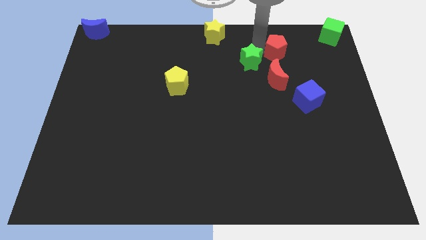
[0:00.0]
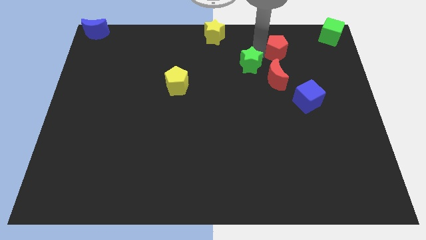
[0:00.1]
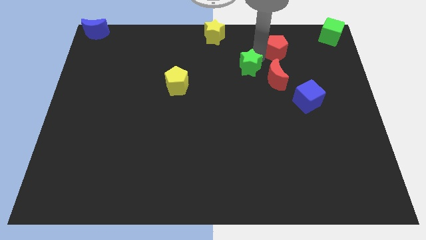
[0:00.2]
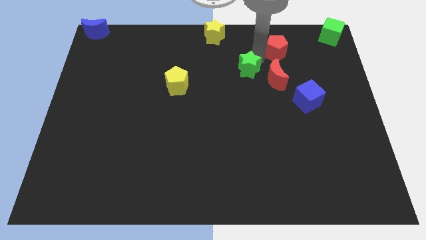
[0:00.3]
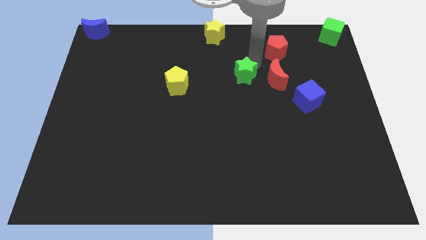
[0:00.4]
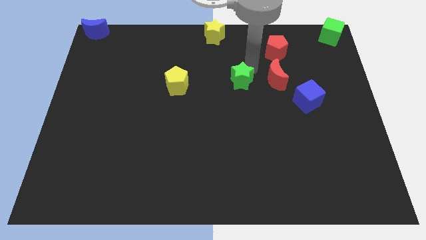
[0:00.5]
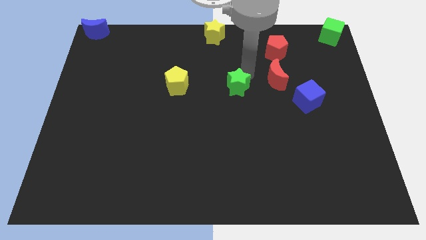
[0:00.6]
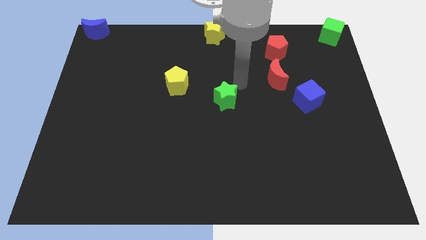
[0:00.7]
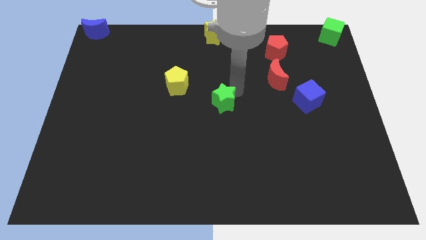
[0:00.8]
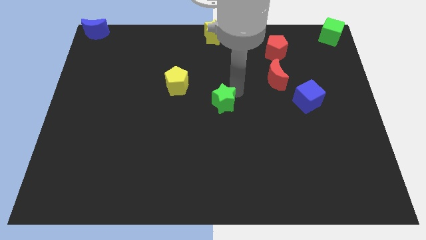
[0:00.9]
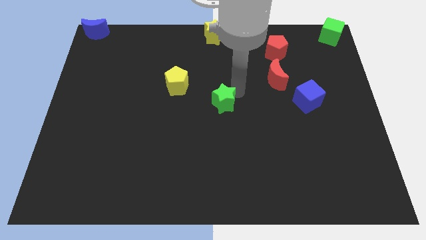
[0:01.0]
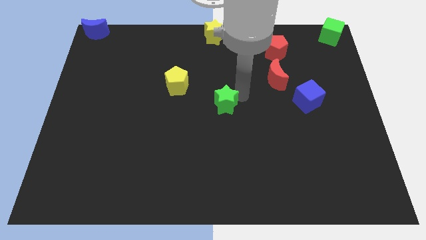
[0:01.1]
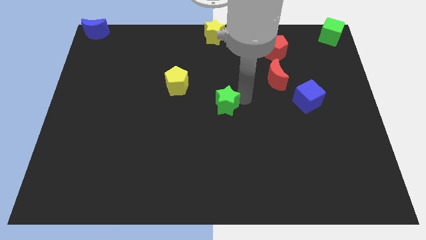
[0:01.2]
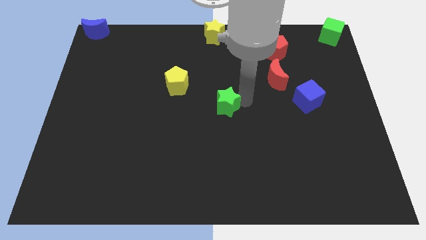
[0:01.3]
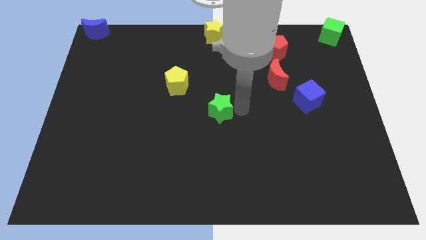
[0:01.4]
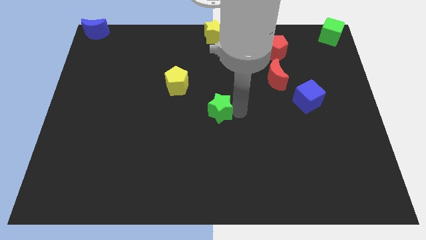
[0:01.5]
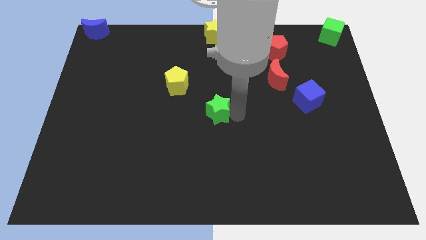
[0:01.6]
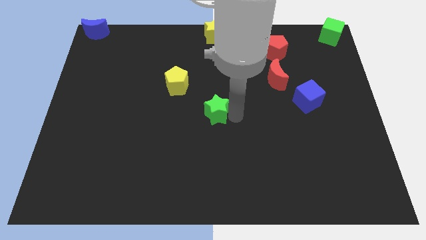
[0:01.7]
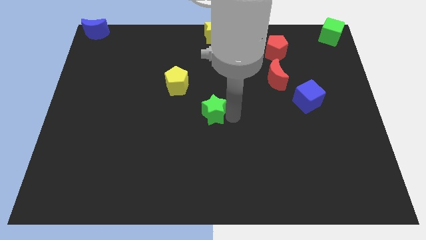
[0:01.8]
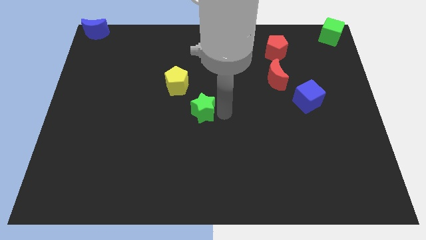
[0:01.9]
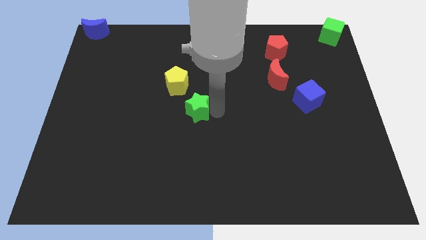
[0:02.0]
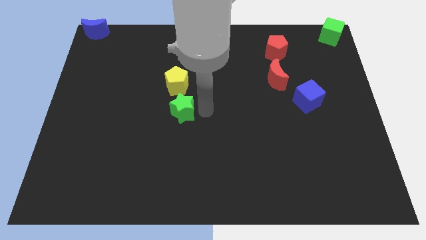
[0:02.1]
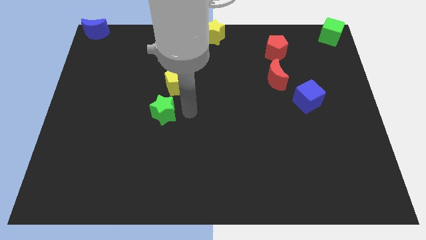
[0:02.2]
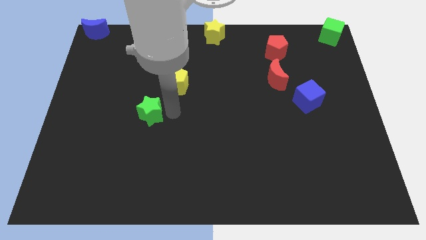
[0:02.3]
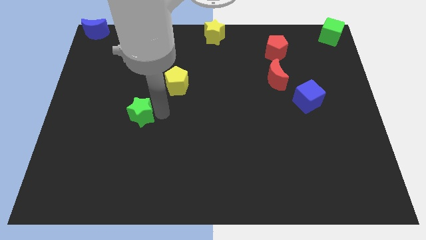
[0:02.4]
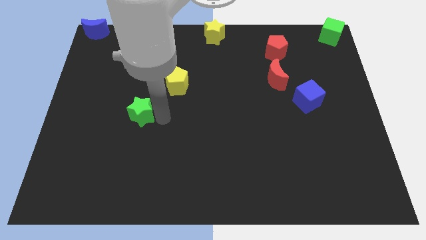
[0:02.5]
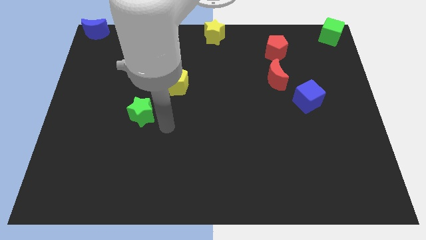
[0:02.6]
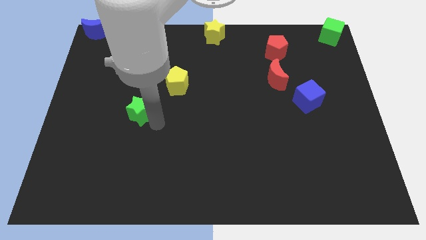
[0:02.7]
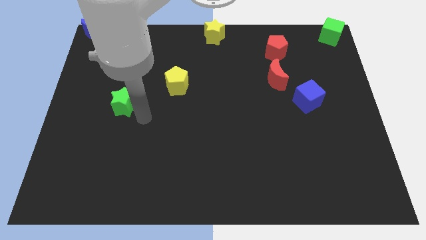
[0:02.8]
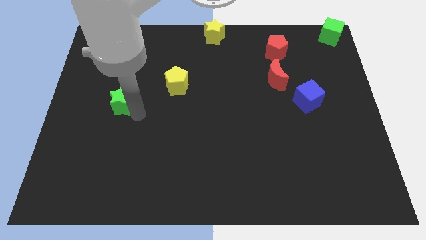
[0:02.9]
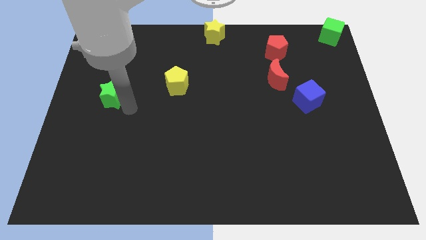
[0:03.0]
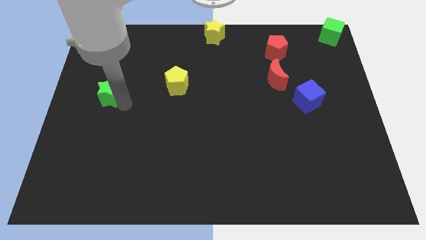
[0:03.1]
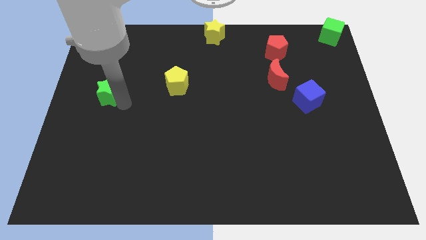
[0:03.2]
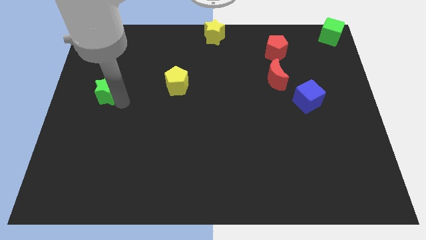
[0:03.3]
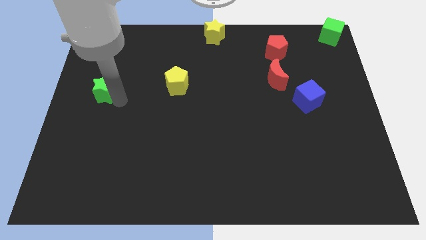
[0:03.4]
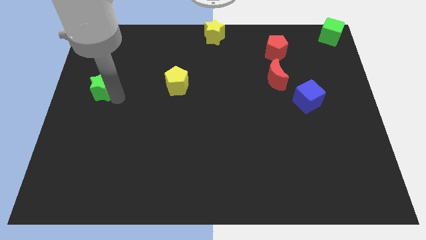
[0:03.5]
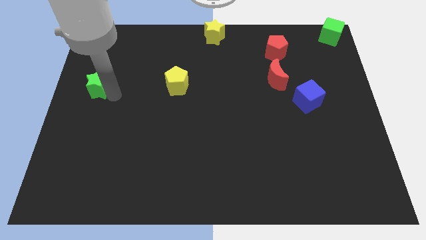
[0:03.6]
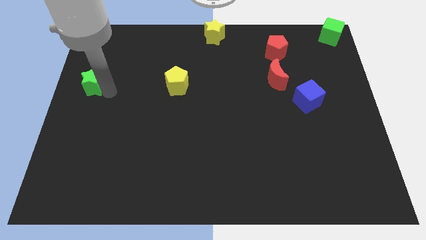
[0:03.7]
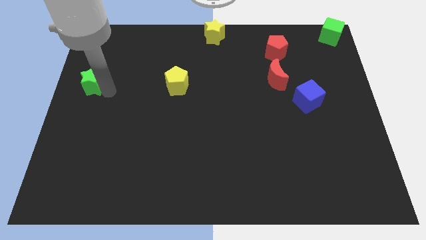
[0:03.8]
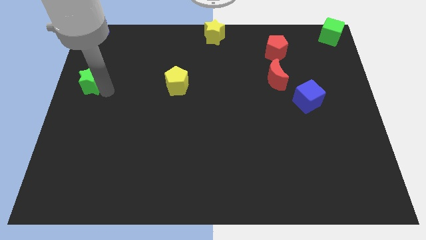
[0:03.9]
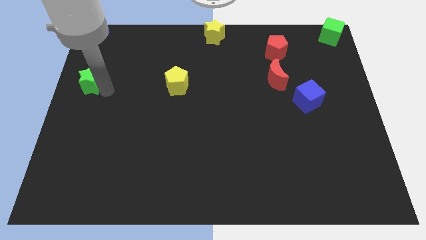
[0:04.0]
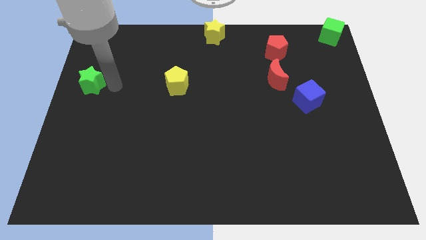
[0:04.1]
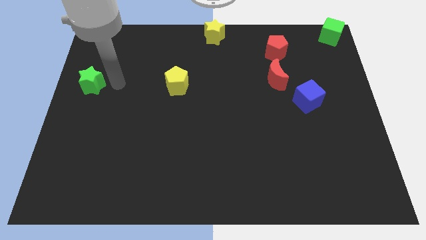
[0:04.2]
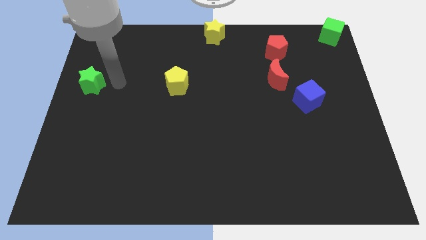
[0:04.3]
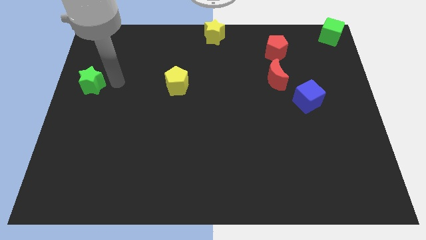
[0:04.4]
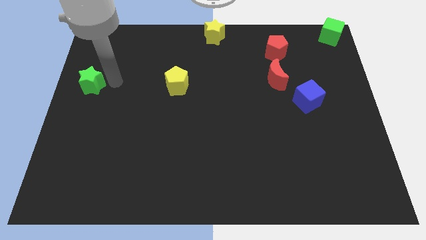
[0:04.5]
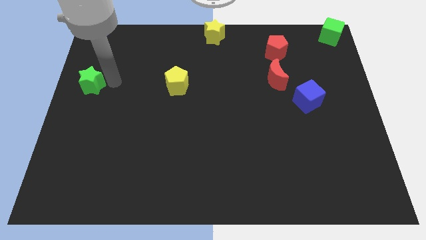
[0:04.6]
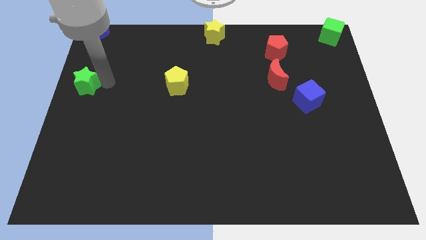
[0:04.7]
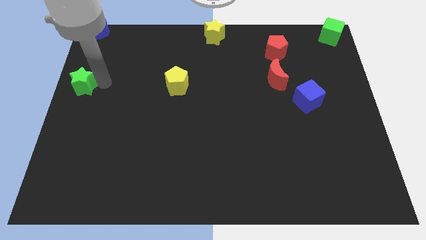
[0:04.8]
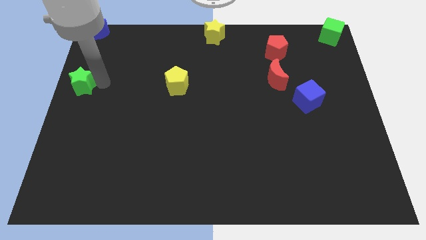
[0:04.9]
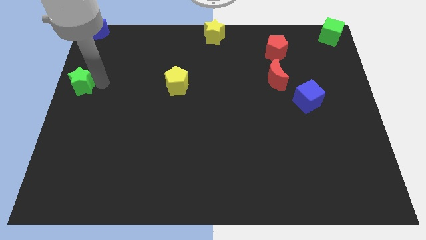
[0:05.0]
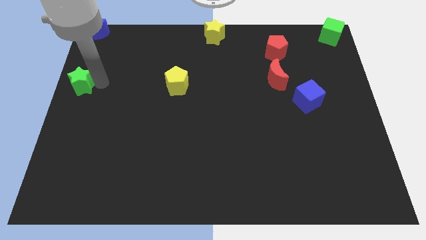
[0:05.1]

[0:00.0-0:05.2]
move the green star down to the blue moon

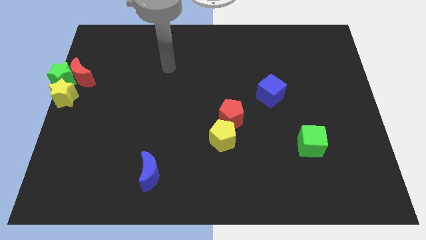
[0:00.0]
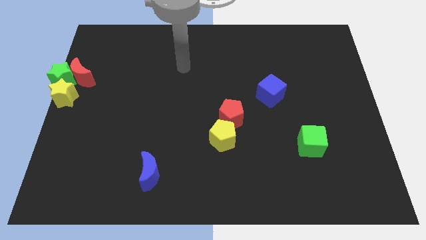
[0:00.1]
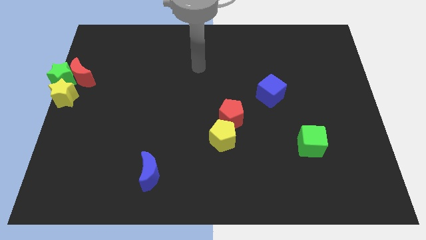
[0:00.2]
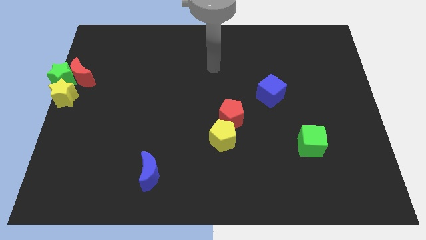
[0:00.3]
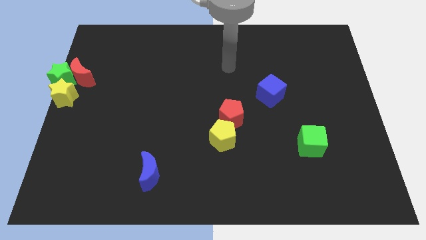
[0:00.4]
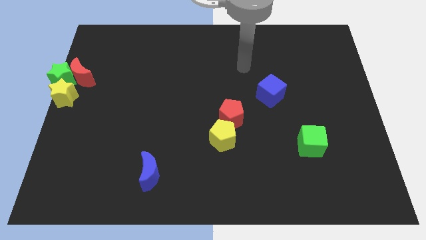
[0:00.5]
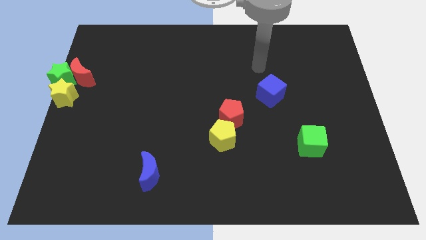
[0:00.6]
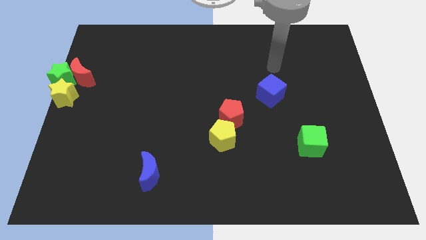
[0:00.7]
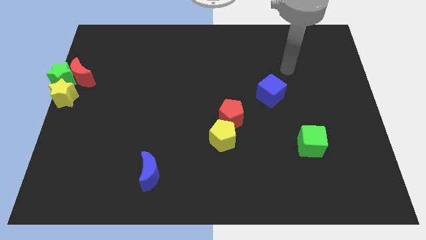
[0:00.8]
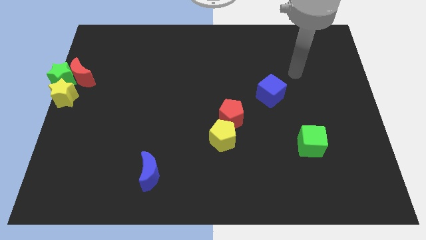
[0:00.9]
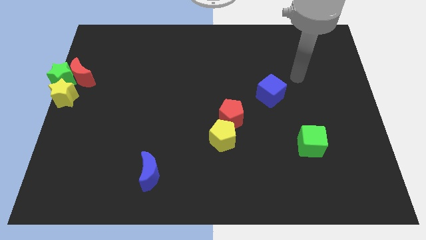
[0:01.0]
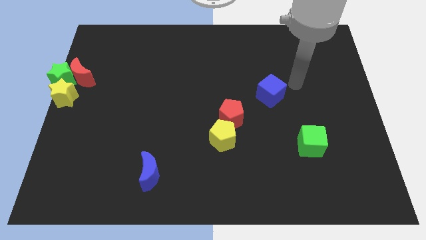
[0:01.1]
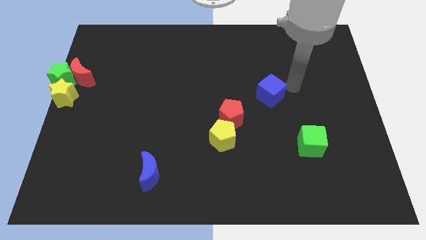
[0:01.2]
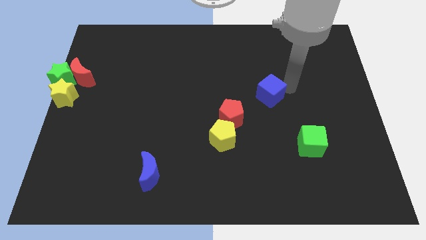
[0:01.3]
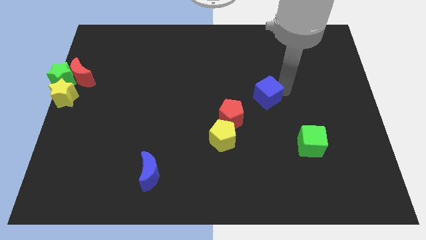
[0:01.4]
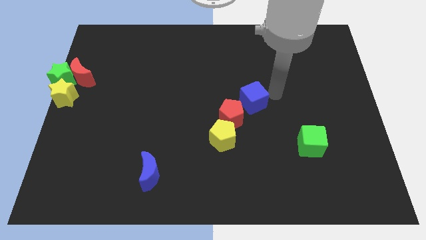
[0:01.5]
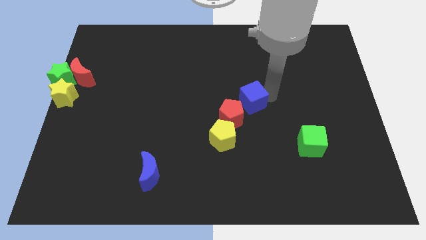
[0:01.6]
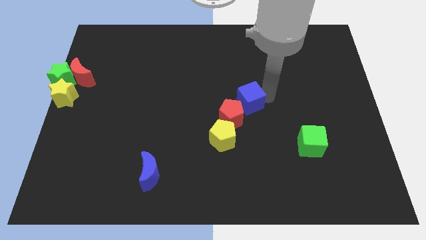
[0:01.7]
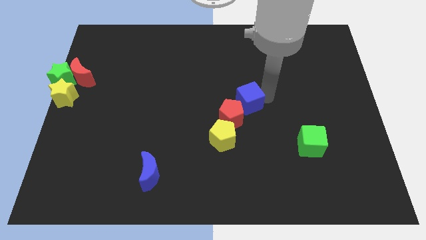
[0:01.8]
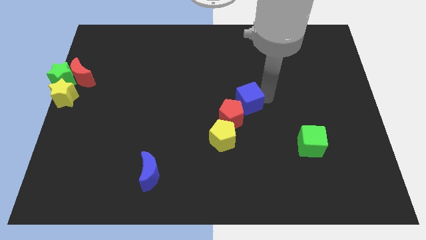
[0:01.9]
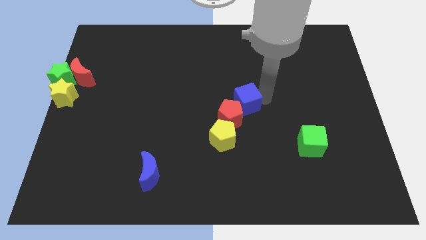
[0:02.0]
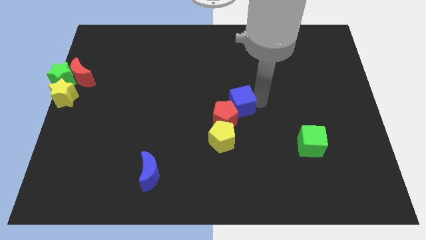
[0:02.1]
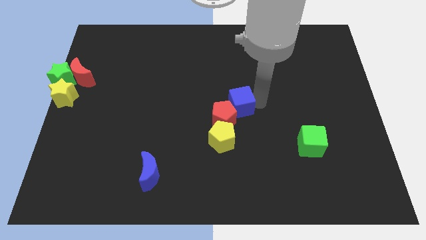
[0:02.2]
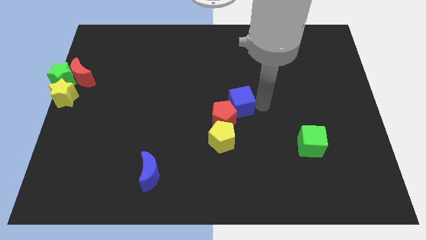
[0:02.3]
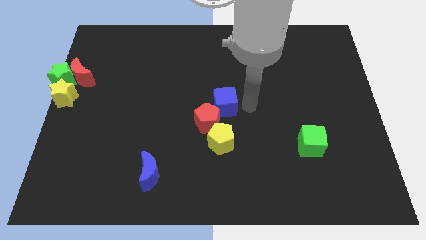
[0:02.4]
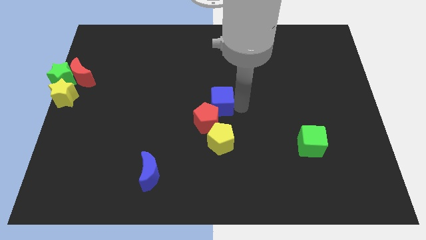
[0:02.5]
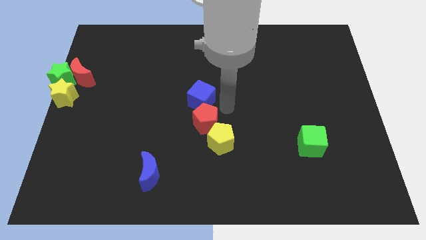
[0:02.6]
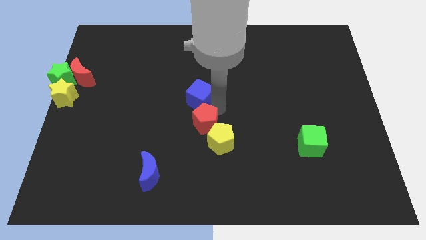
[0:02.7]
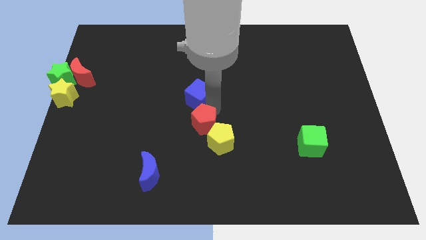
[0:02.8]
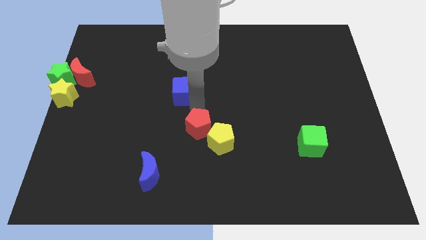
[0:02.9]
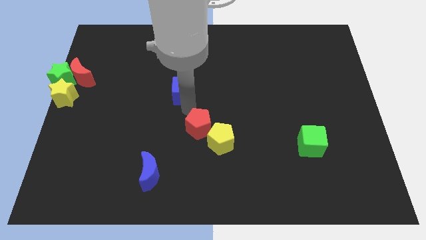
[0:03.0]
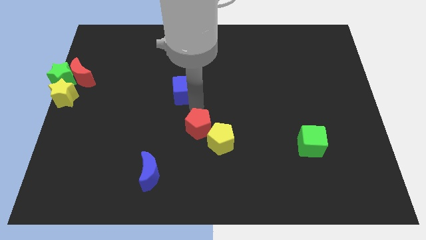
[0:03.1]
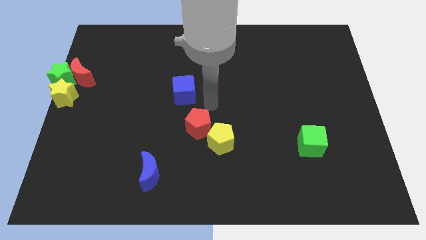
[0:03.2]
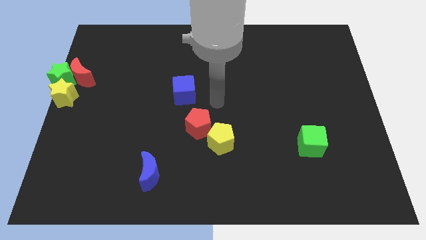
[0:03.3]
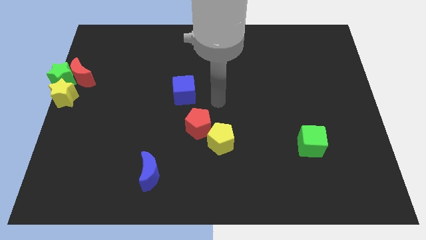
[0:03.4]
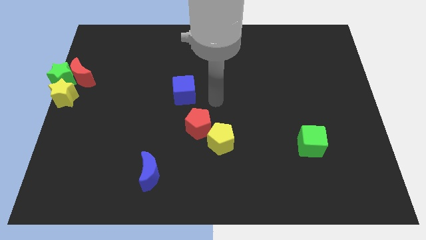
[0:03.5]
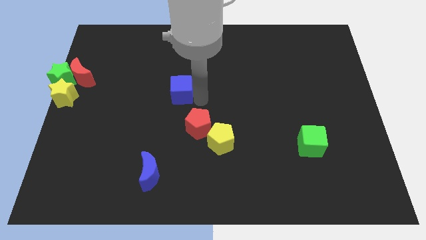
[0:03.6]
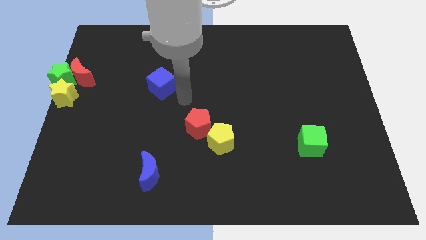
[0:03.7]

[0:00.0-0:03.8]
push the blue cube to the left

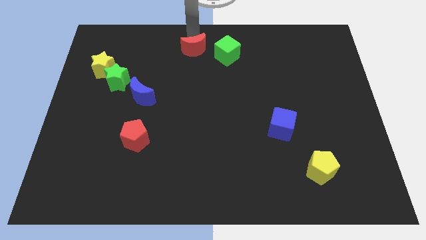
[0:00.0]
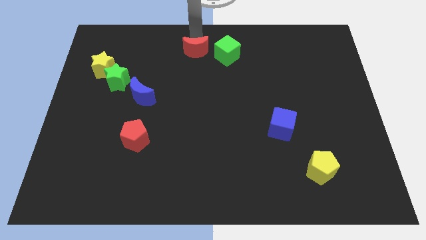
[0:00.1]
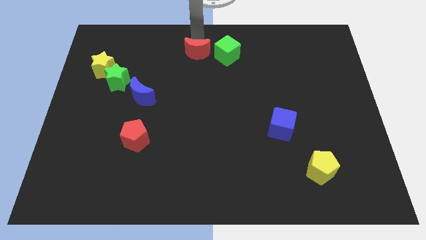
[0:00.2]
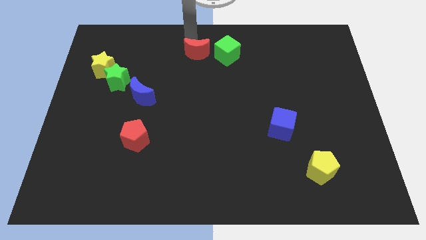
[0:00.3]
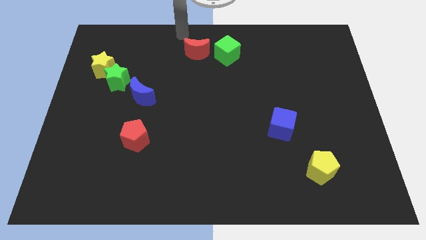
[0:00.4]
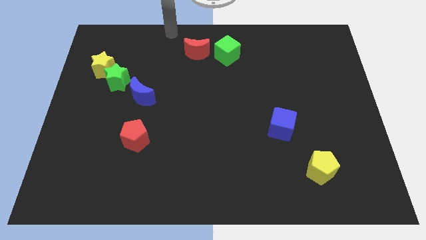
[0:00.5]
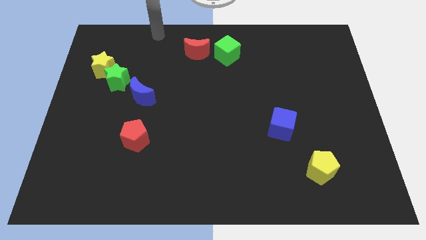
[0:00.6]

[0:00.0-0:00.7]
slightly move the red crescent to right
